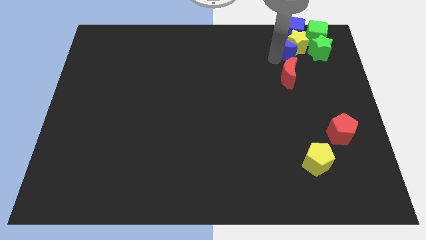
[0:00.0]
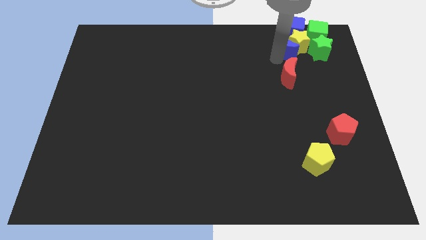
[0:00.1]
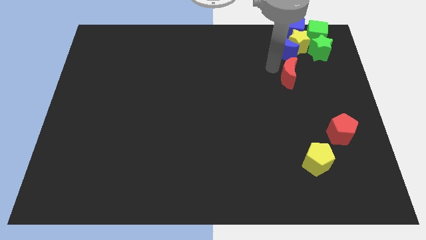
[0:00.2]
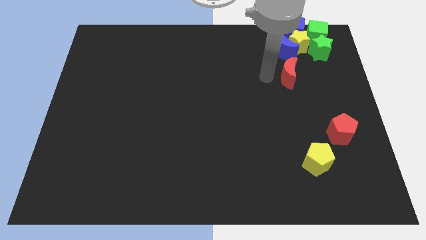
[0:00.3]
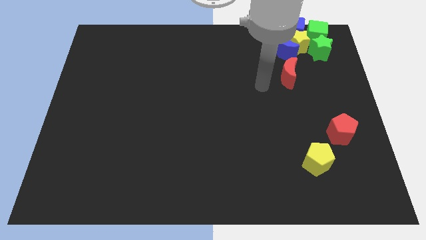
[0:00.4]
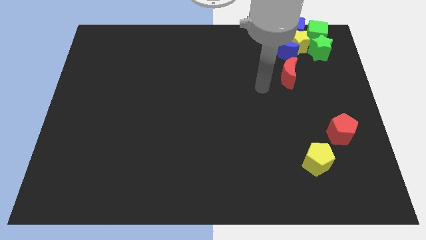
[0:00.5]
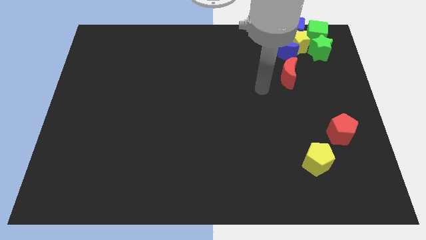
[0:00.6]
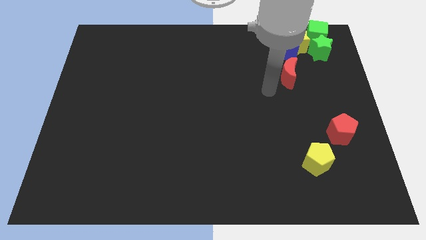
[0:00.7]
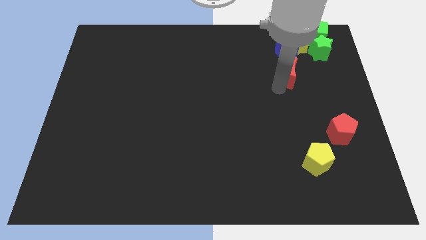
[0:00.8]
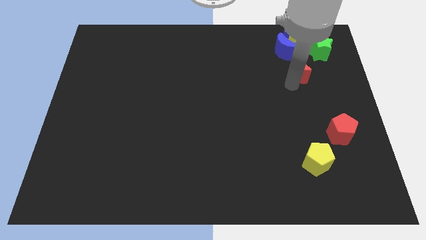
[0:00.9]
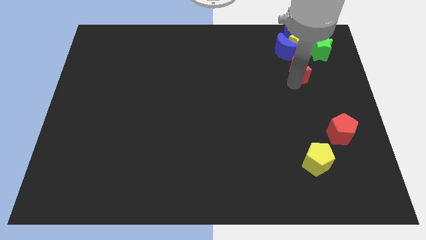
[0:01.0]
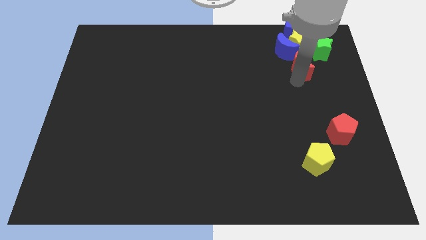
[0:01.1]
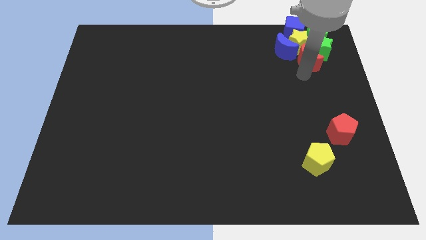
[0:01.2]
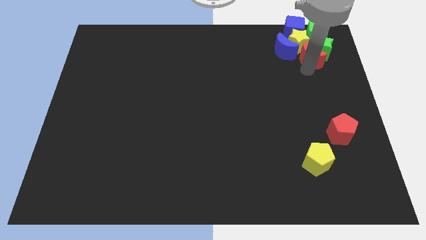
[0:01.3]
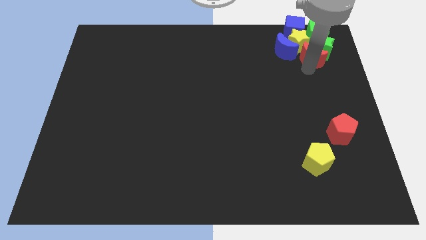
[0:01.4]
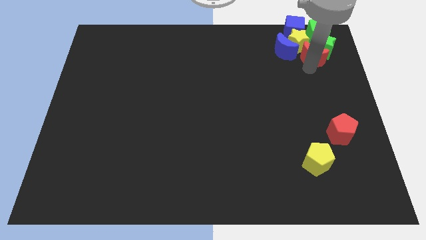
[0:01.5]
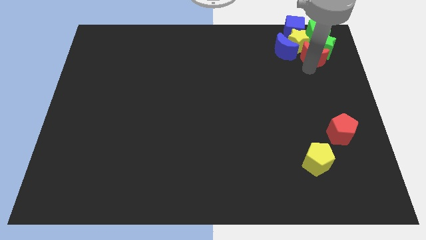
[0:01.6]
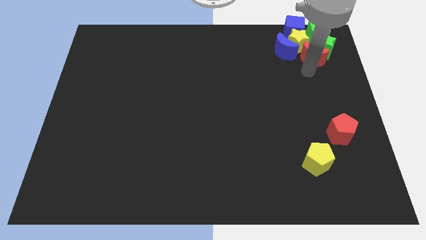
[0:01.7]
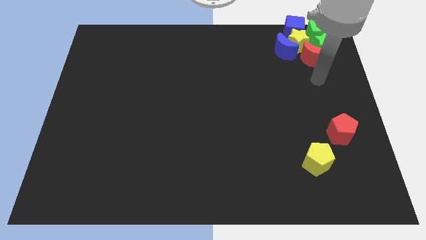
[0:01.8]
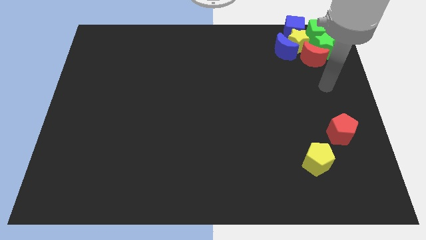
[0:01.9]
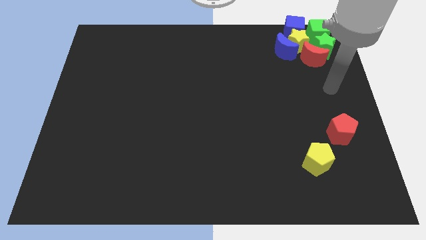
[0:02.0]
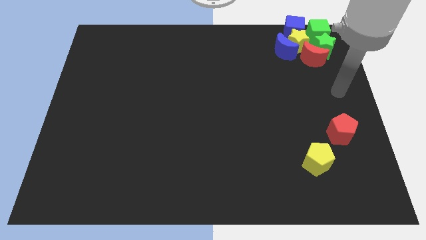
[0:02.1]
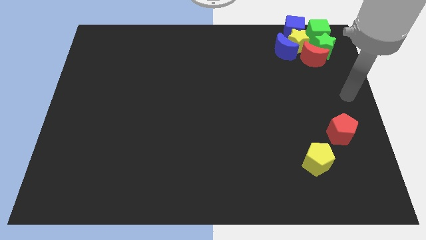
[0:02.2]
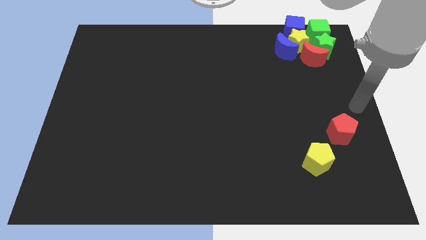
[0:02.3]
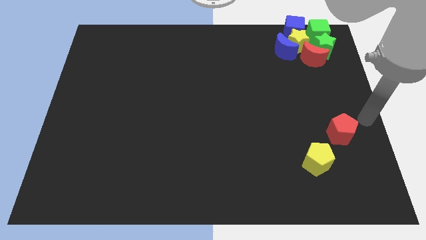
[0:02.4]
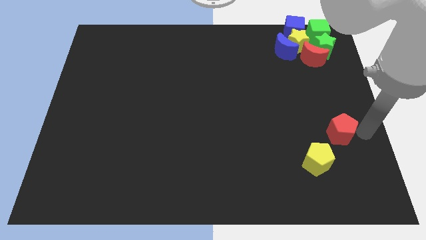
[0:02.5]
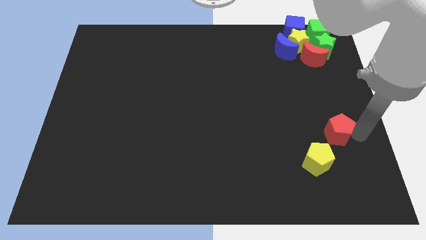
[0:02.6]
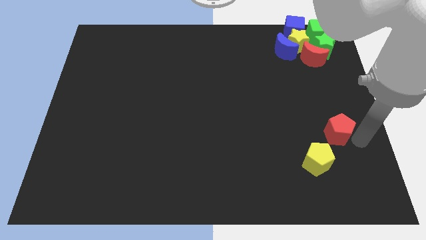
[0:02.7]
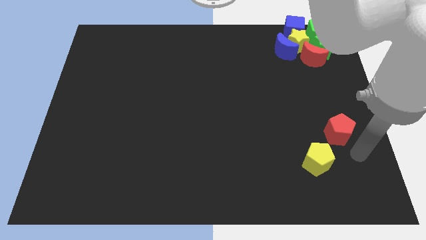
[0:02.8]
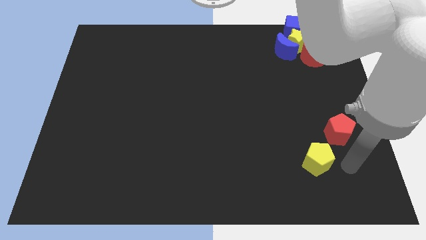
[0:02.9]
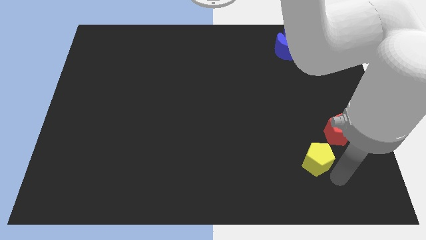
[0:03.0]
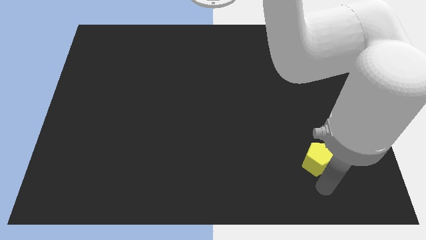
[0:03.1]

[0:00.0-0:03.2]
put the red moon to the bottom of the green star

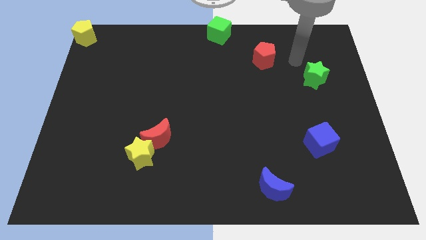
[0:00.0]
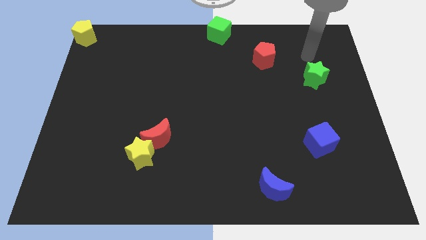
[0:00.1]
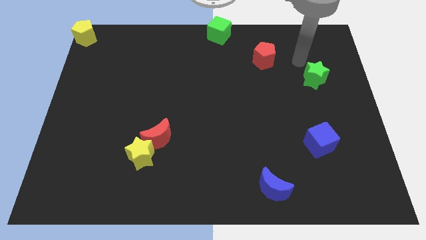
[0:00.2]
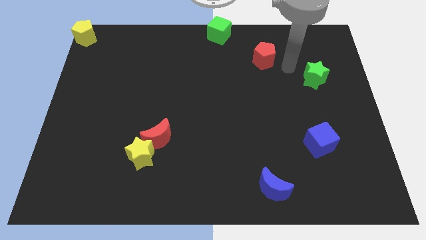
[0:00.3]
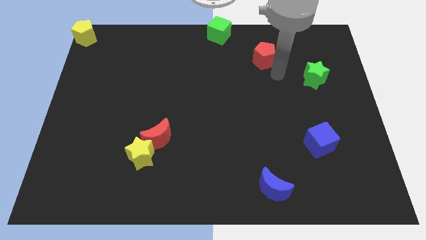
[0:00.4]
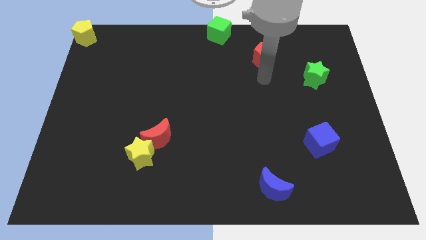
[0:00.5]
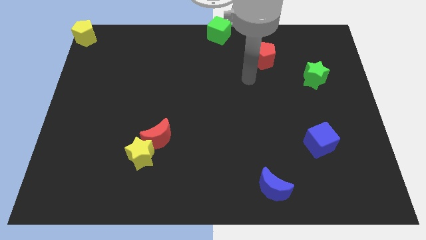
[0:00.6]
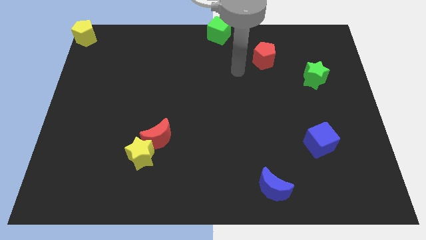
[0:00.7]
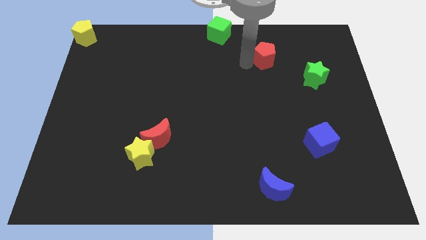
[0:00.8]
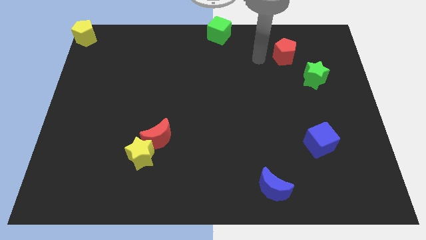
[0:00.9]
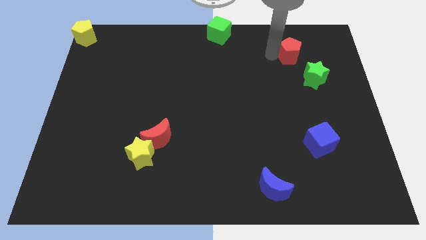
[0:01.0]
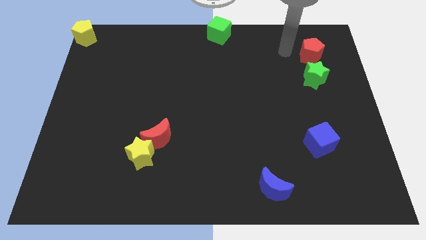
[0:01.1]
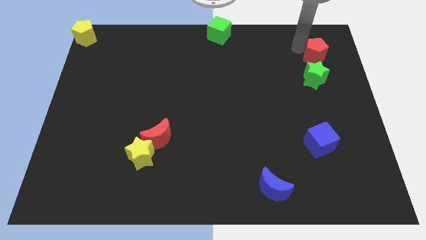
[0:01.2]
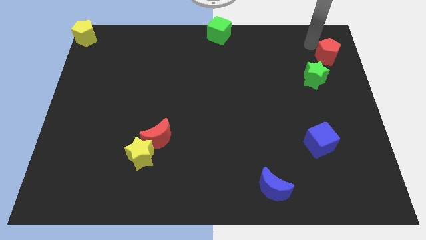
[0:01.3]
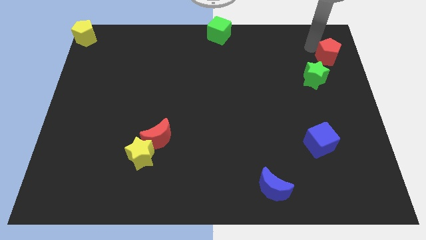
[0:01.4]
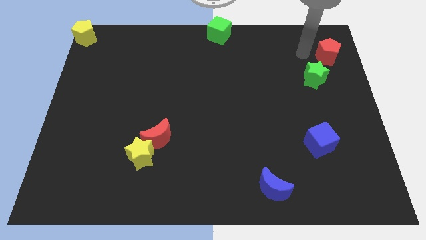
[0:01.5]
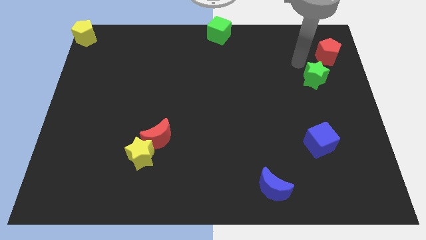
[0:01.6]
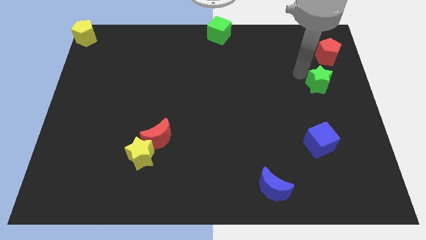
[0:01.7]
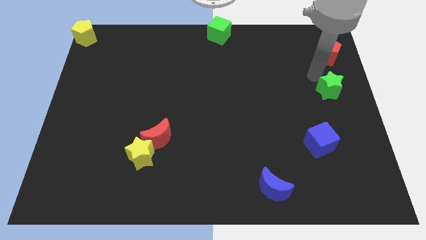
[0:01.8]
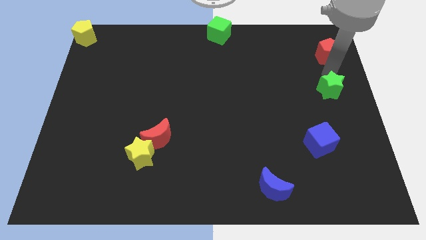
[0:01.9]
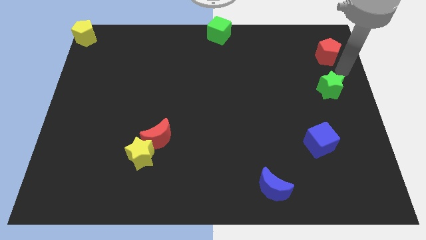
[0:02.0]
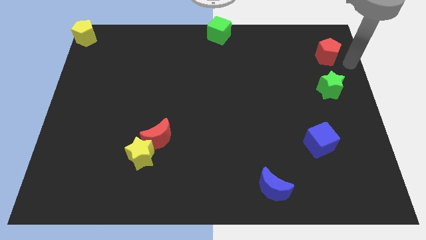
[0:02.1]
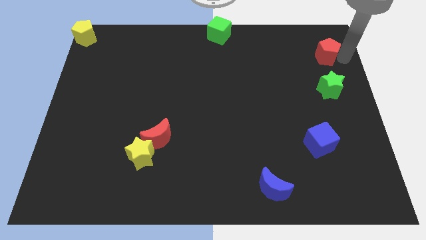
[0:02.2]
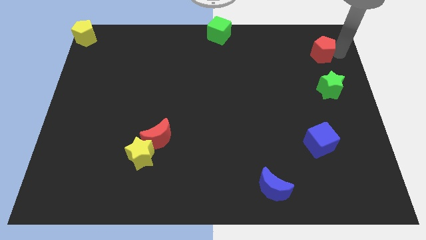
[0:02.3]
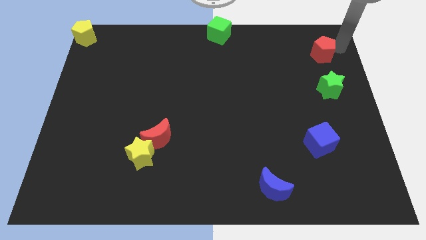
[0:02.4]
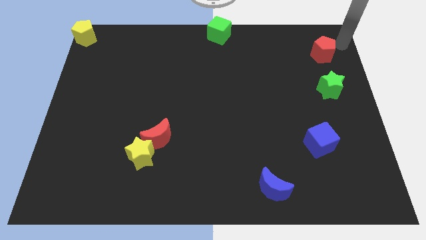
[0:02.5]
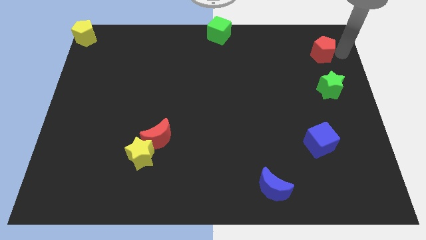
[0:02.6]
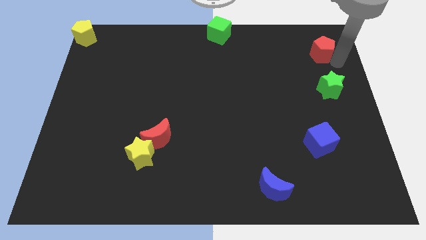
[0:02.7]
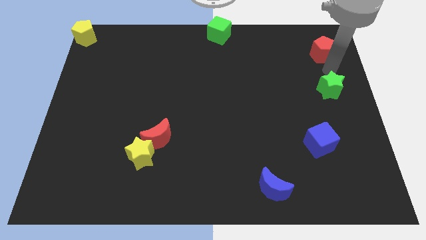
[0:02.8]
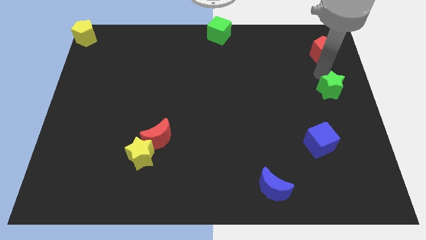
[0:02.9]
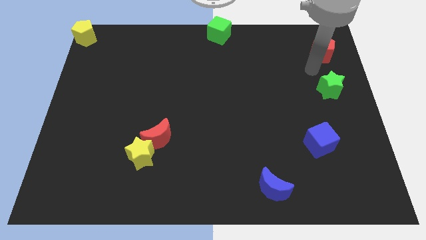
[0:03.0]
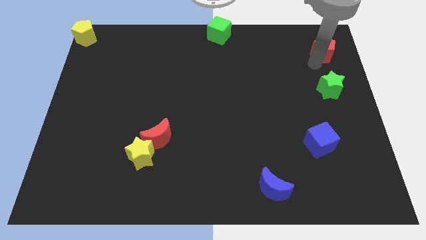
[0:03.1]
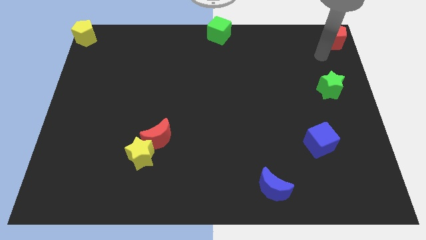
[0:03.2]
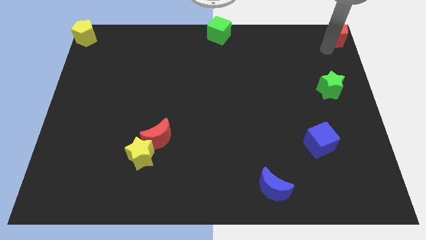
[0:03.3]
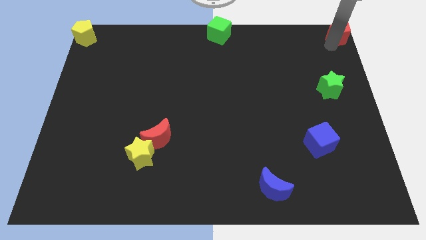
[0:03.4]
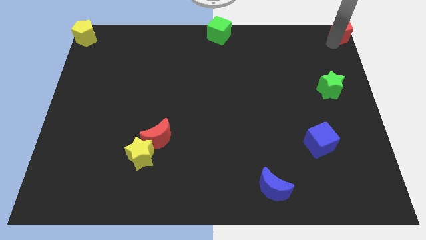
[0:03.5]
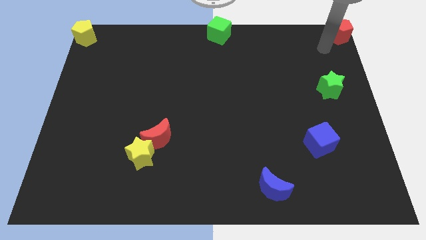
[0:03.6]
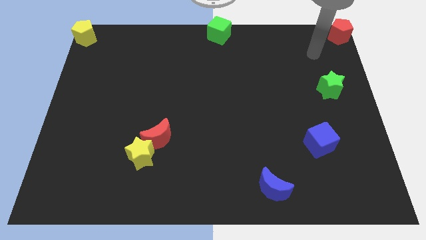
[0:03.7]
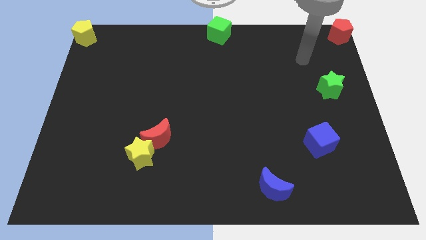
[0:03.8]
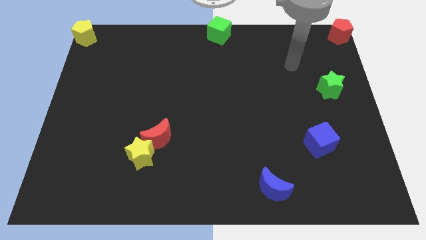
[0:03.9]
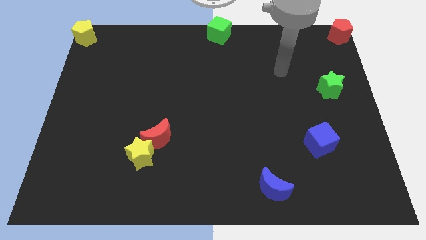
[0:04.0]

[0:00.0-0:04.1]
place the red pentagon at the top right corner

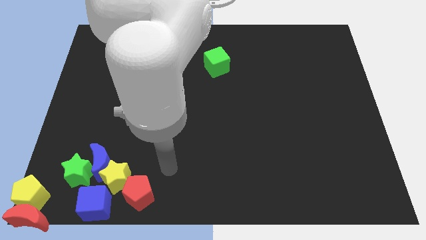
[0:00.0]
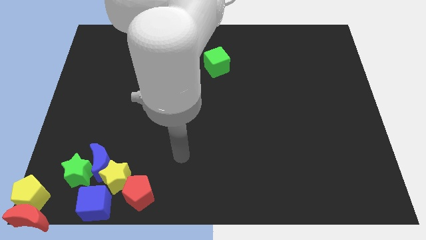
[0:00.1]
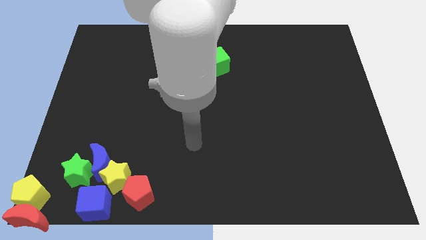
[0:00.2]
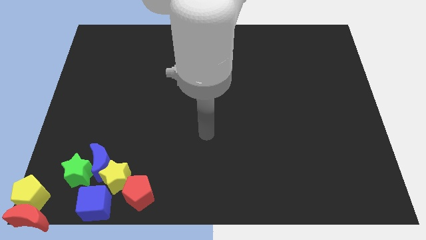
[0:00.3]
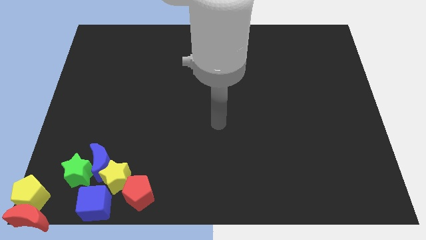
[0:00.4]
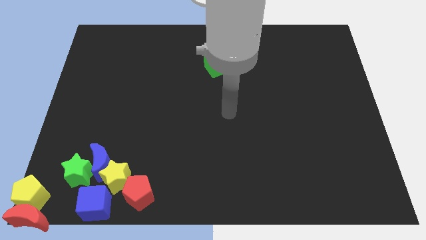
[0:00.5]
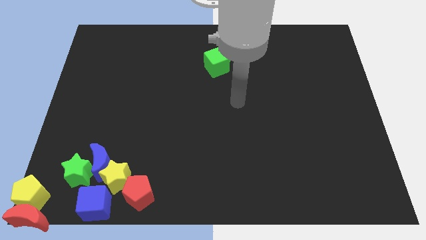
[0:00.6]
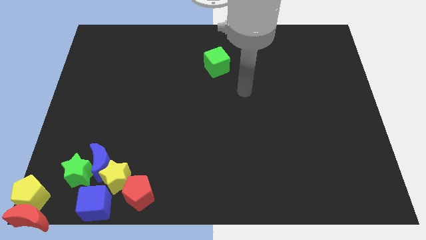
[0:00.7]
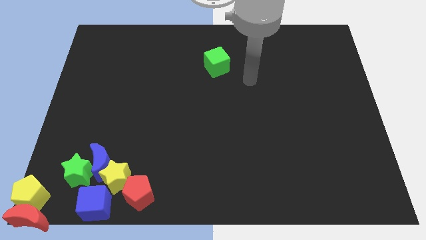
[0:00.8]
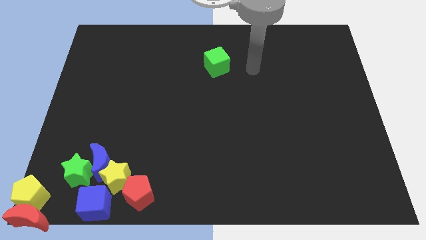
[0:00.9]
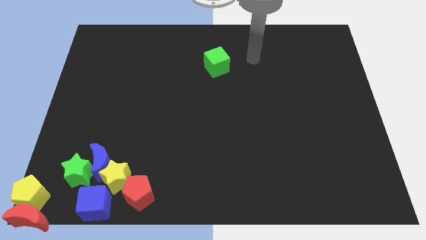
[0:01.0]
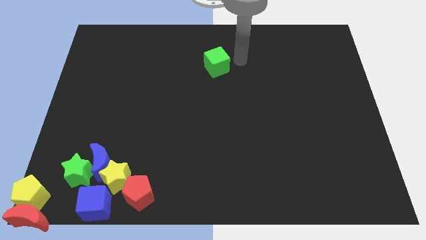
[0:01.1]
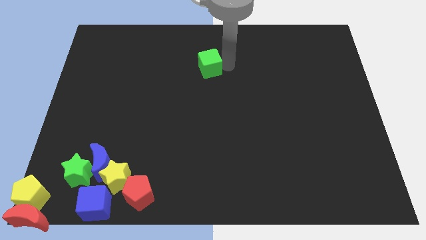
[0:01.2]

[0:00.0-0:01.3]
point your arm at the right side of the green cube

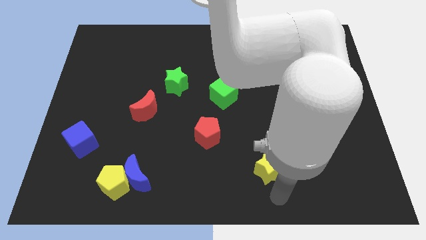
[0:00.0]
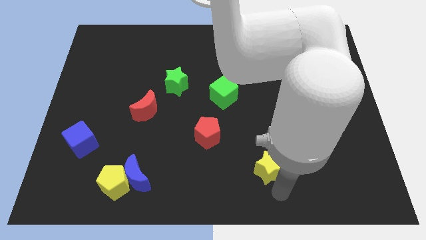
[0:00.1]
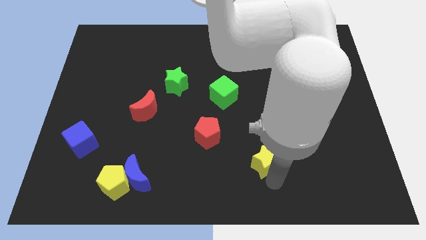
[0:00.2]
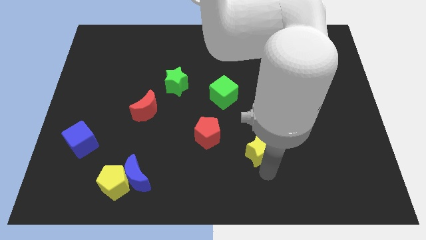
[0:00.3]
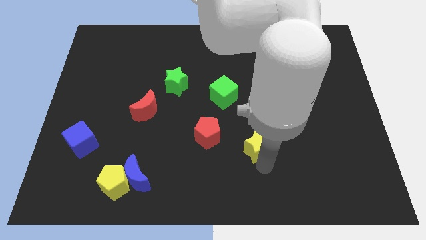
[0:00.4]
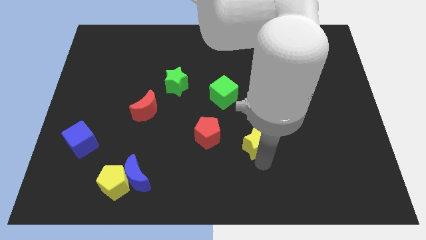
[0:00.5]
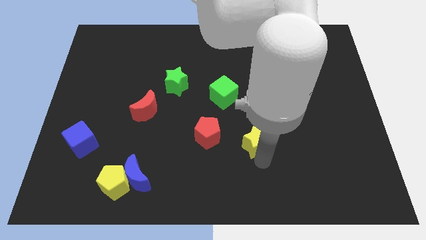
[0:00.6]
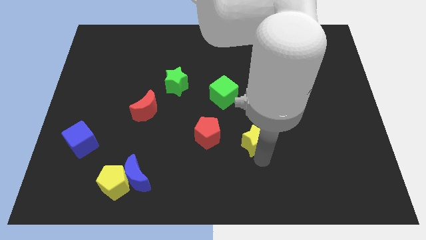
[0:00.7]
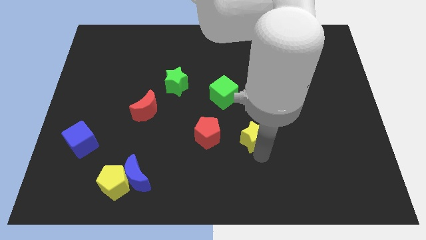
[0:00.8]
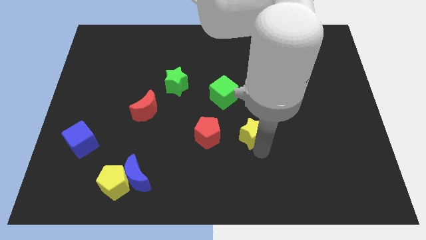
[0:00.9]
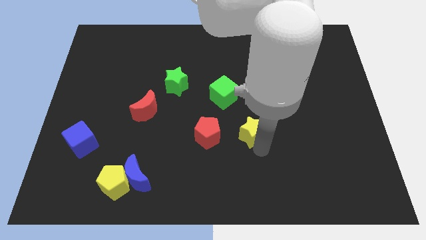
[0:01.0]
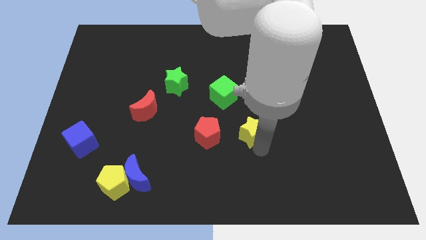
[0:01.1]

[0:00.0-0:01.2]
place yellow star beside red pentagon
